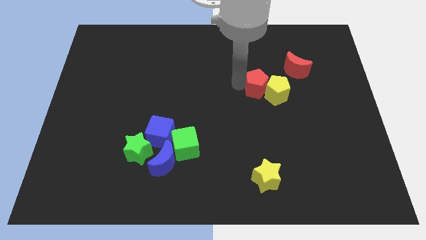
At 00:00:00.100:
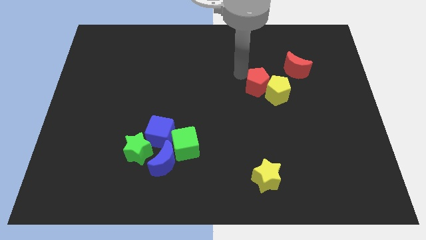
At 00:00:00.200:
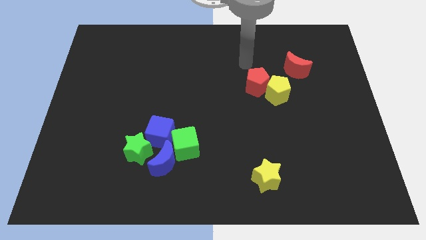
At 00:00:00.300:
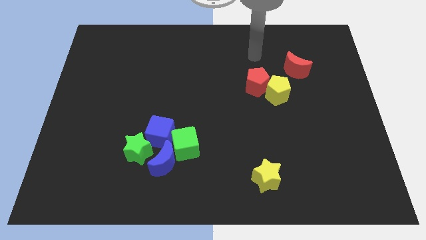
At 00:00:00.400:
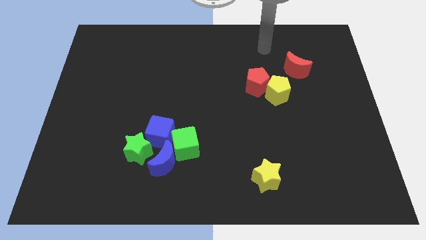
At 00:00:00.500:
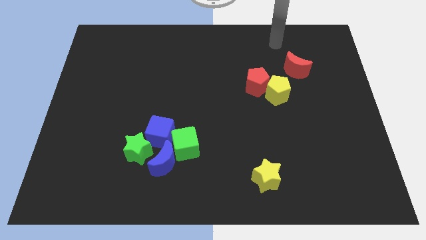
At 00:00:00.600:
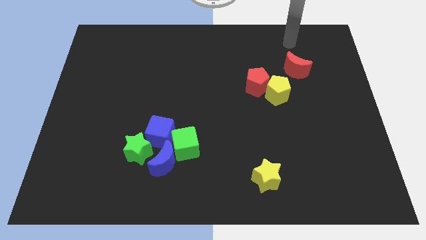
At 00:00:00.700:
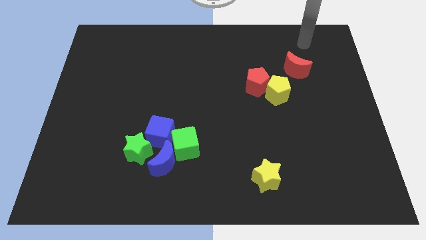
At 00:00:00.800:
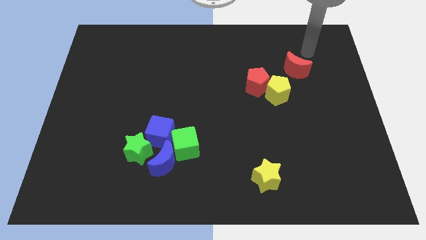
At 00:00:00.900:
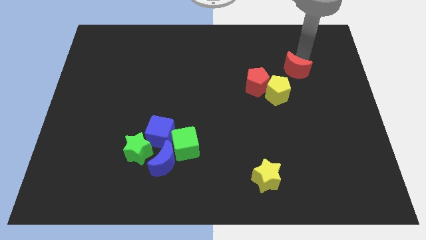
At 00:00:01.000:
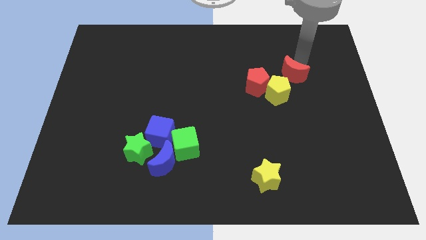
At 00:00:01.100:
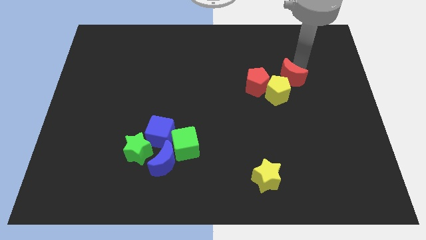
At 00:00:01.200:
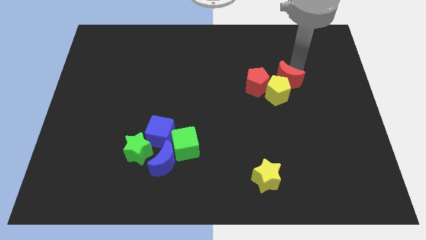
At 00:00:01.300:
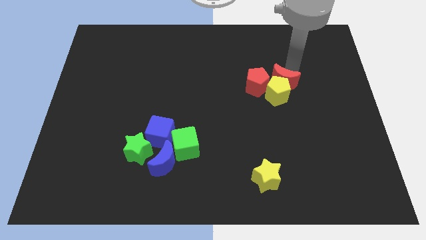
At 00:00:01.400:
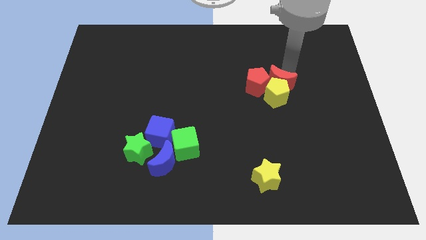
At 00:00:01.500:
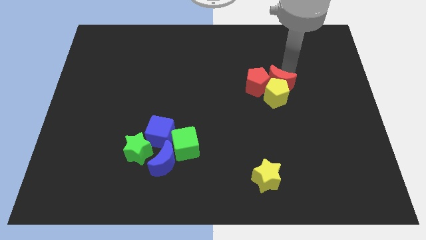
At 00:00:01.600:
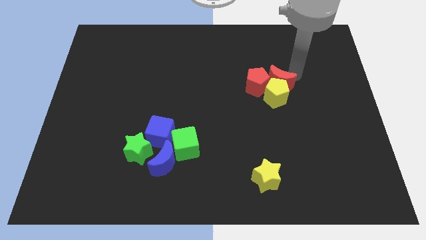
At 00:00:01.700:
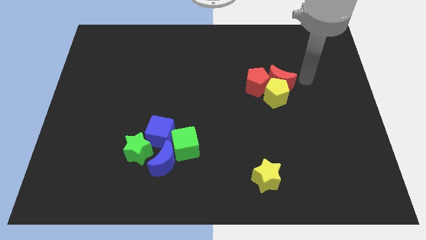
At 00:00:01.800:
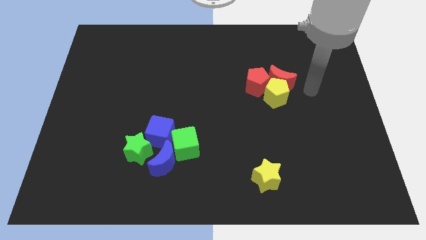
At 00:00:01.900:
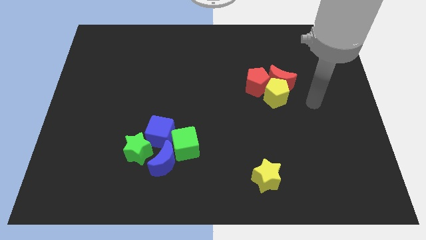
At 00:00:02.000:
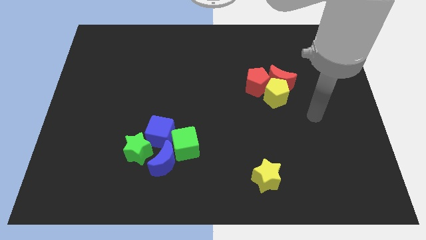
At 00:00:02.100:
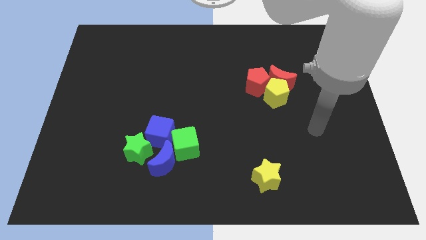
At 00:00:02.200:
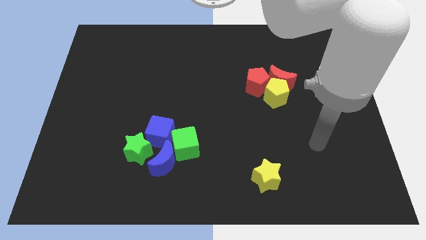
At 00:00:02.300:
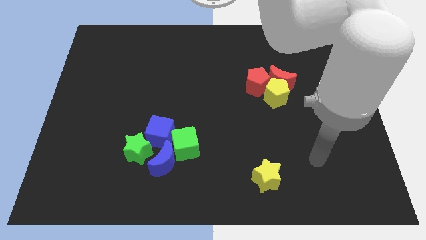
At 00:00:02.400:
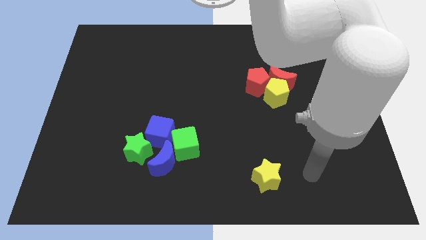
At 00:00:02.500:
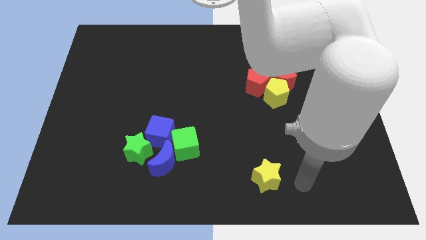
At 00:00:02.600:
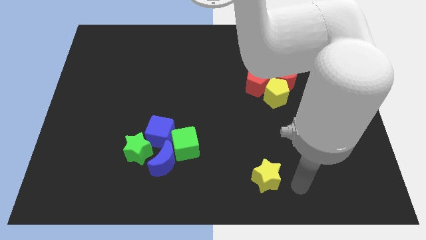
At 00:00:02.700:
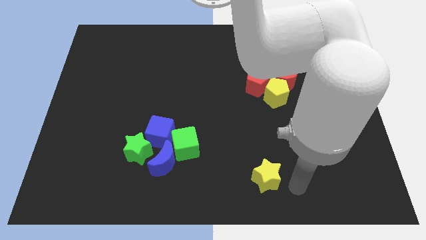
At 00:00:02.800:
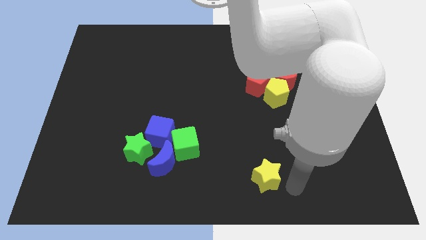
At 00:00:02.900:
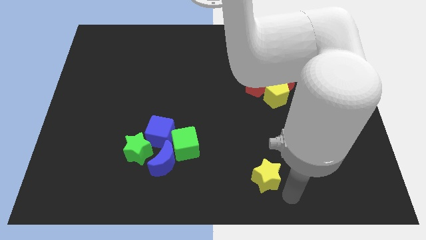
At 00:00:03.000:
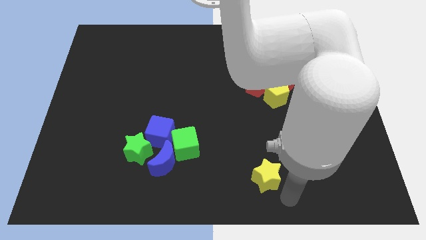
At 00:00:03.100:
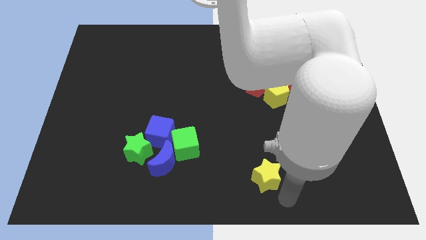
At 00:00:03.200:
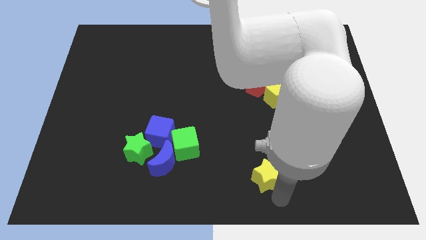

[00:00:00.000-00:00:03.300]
move your arm below to the yellow star

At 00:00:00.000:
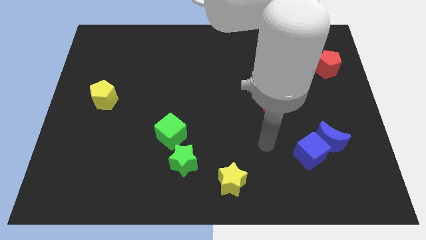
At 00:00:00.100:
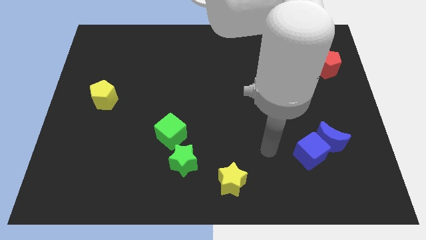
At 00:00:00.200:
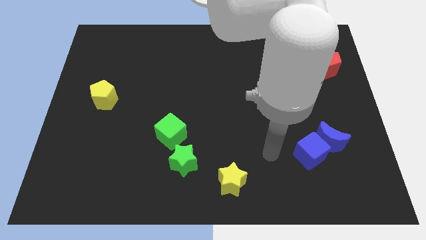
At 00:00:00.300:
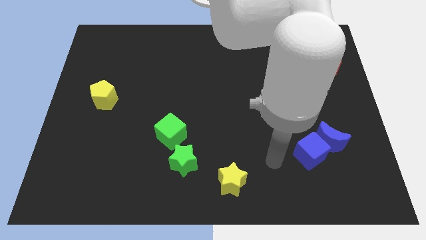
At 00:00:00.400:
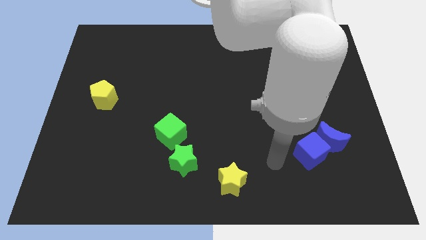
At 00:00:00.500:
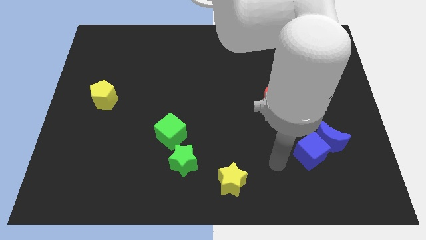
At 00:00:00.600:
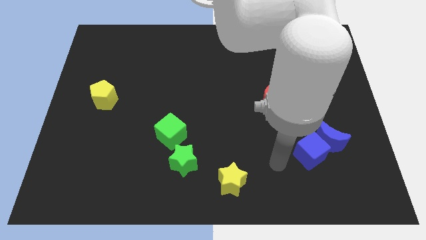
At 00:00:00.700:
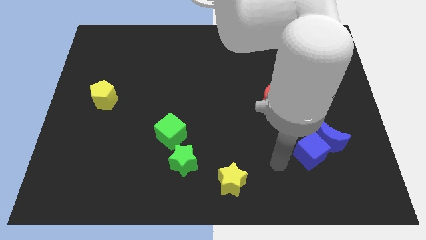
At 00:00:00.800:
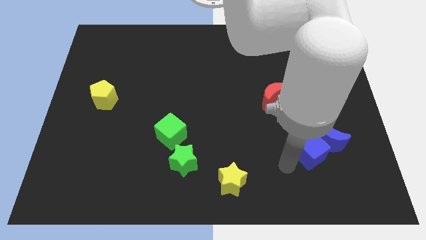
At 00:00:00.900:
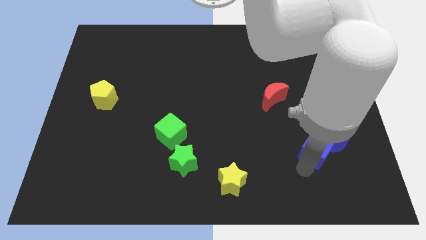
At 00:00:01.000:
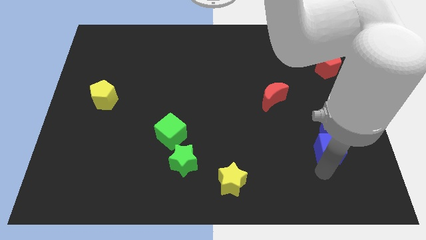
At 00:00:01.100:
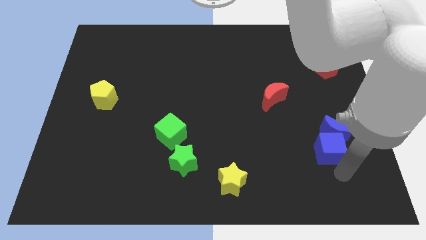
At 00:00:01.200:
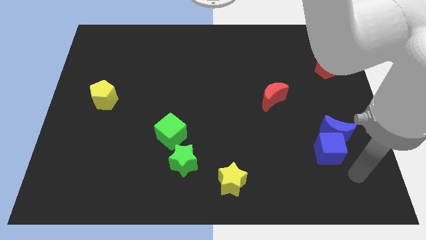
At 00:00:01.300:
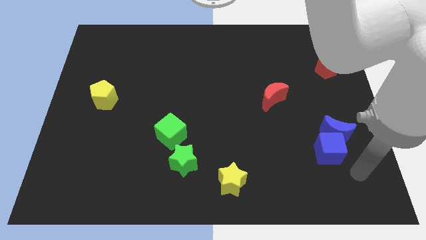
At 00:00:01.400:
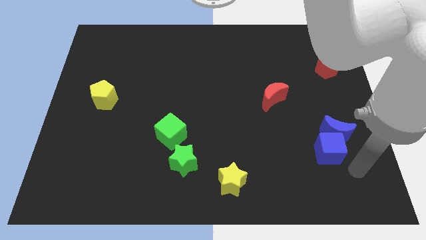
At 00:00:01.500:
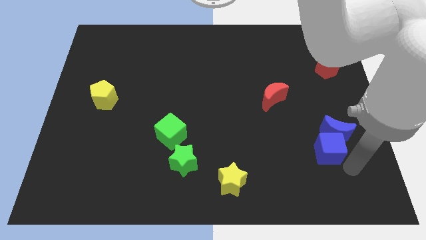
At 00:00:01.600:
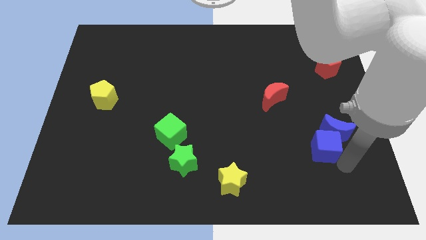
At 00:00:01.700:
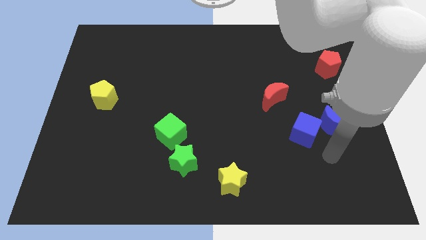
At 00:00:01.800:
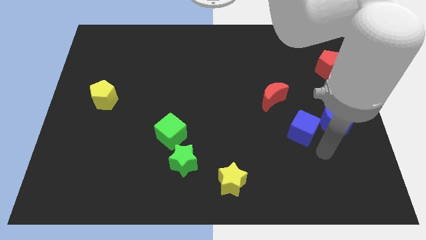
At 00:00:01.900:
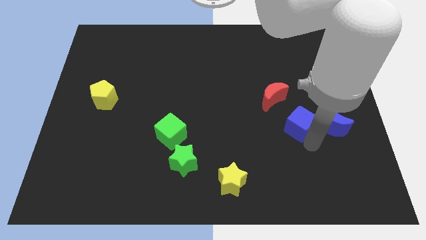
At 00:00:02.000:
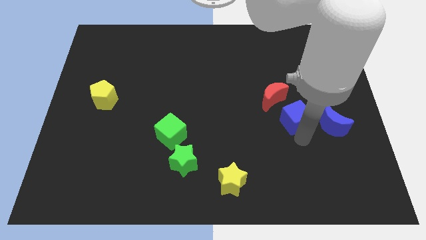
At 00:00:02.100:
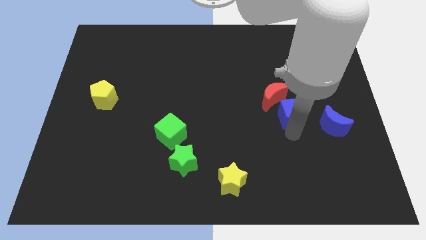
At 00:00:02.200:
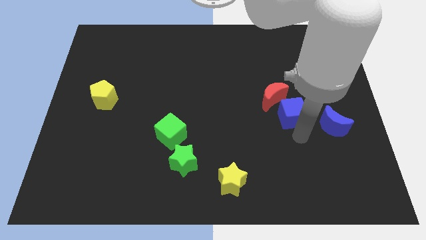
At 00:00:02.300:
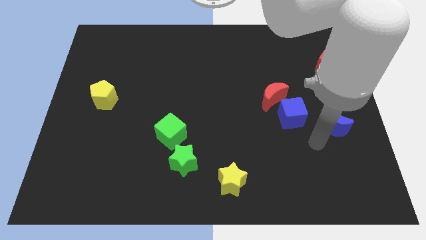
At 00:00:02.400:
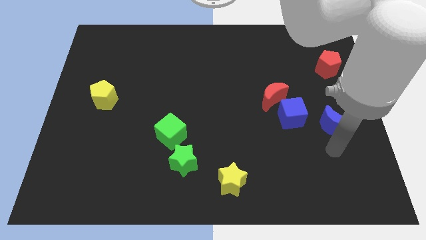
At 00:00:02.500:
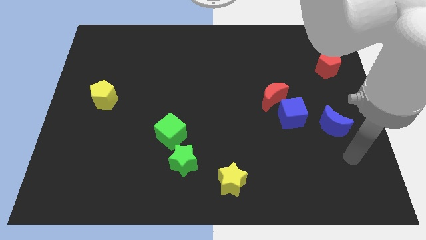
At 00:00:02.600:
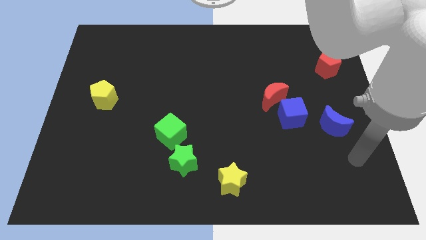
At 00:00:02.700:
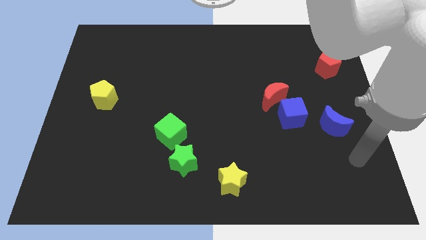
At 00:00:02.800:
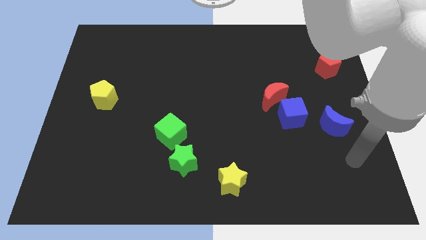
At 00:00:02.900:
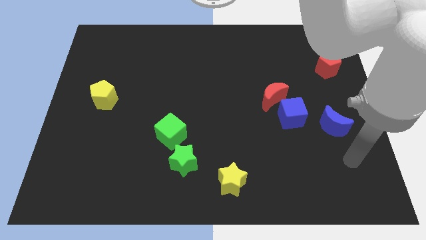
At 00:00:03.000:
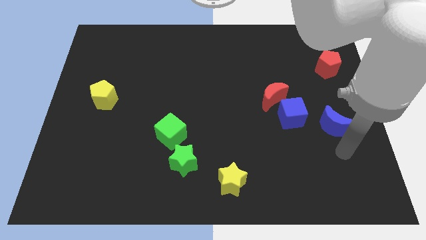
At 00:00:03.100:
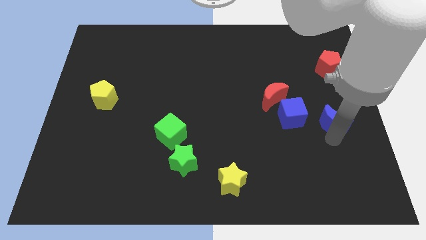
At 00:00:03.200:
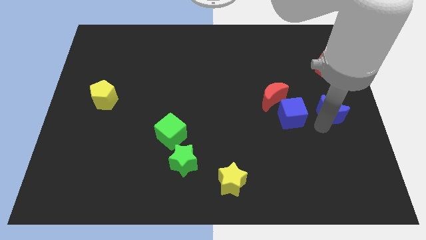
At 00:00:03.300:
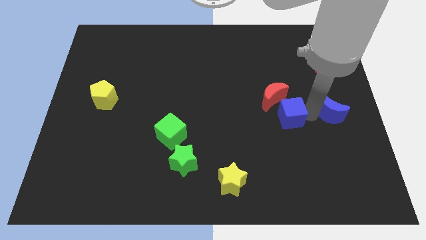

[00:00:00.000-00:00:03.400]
move the blue cube to the left side of the blue crescent

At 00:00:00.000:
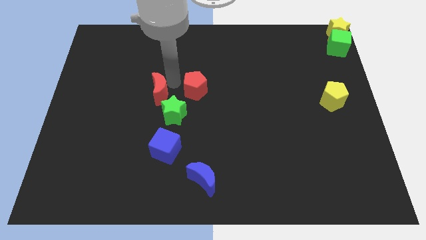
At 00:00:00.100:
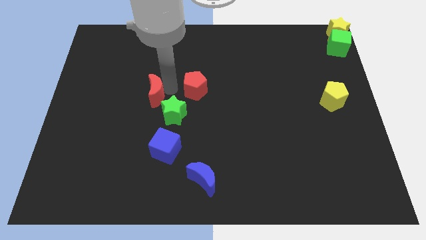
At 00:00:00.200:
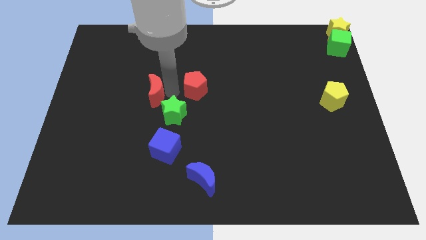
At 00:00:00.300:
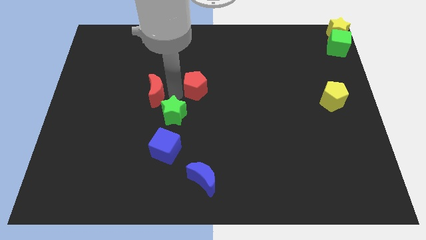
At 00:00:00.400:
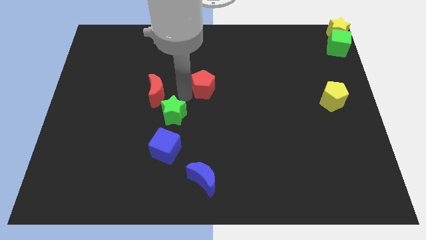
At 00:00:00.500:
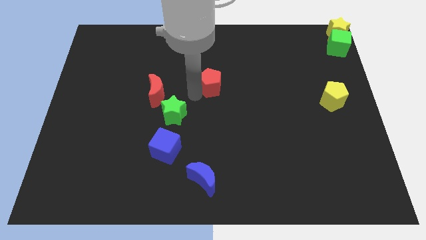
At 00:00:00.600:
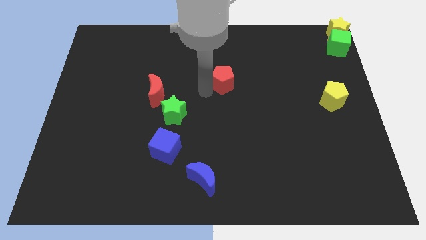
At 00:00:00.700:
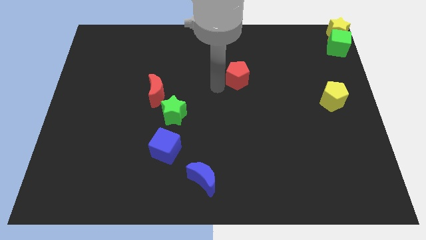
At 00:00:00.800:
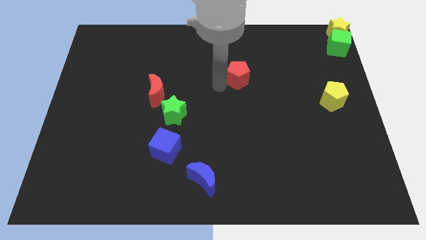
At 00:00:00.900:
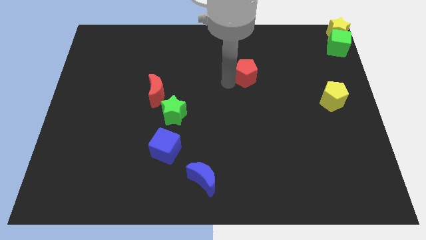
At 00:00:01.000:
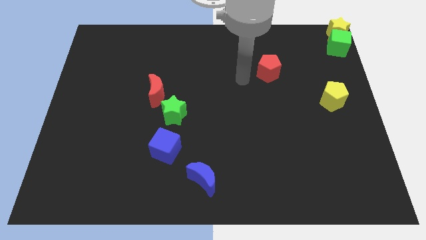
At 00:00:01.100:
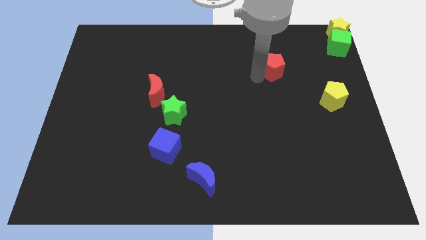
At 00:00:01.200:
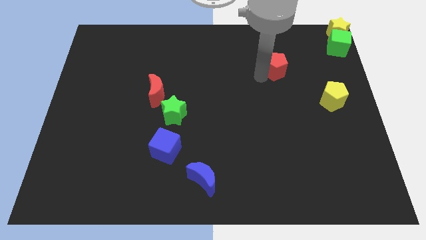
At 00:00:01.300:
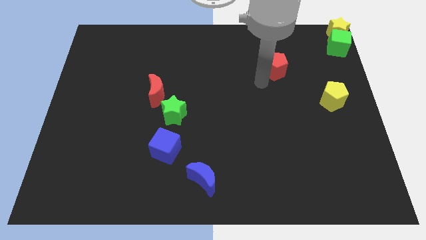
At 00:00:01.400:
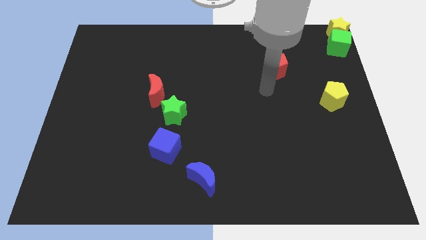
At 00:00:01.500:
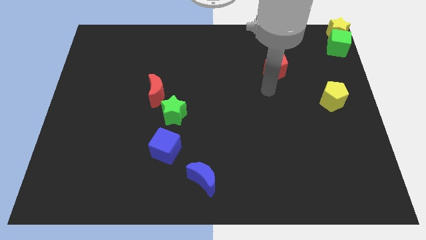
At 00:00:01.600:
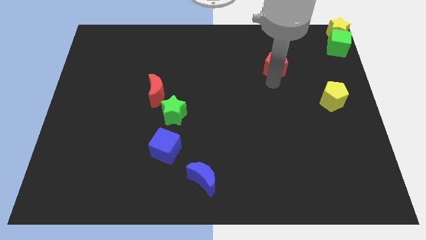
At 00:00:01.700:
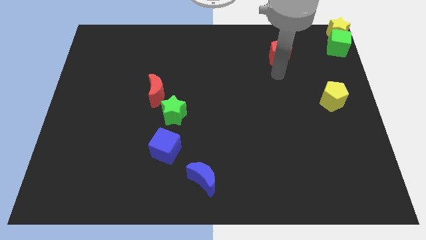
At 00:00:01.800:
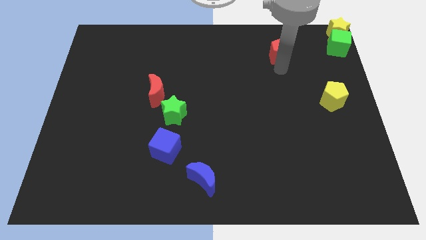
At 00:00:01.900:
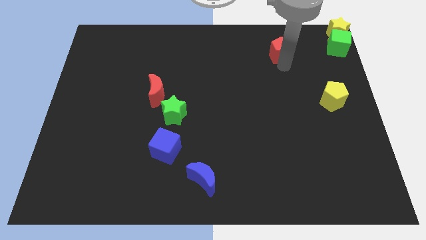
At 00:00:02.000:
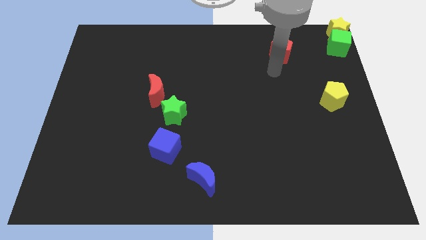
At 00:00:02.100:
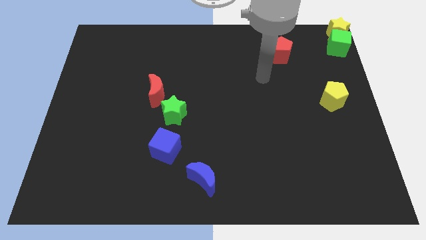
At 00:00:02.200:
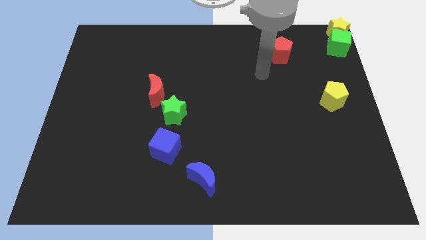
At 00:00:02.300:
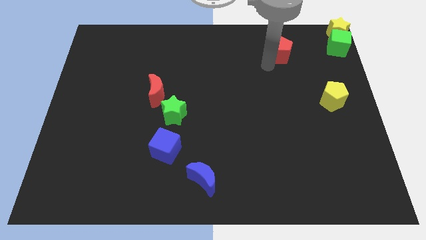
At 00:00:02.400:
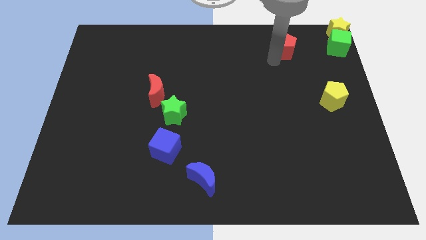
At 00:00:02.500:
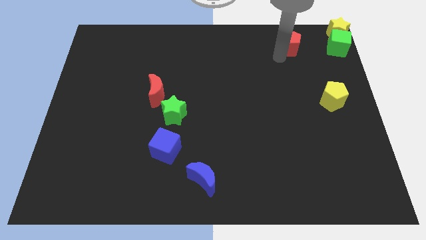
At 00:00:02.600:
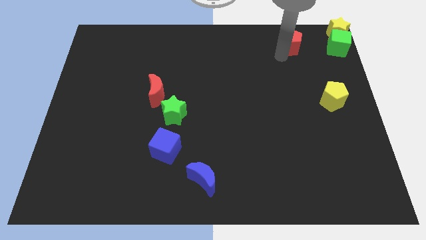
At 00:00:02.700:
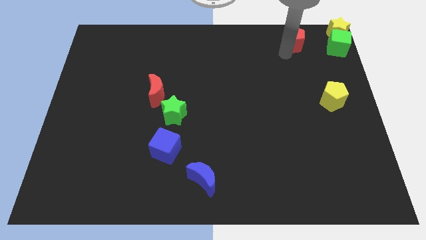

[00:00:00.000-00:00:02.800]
place the red pentagon at the left side of the green cube
